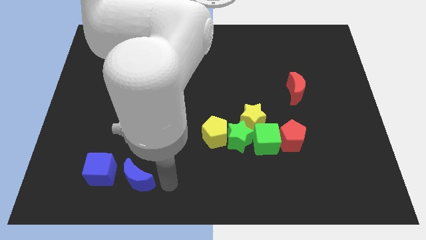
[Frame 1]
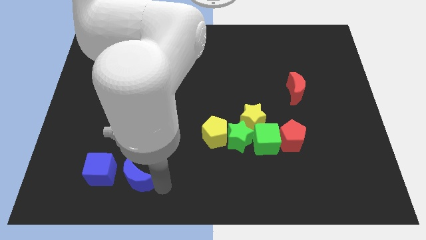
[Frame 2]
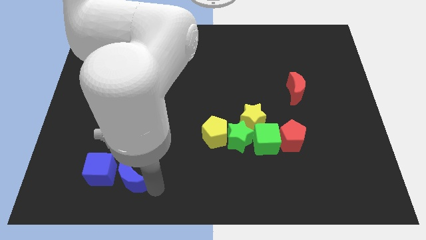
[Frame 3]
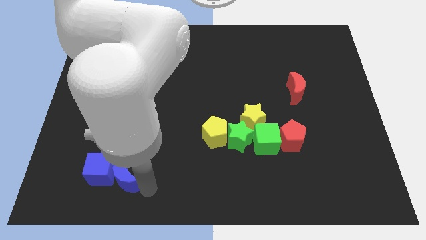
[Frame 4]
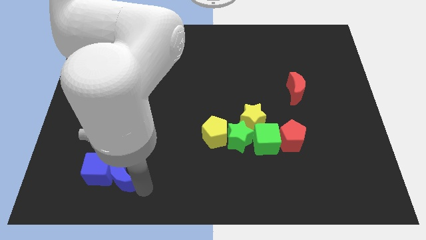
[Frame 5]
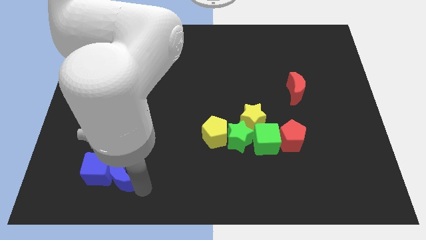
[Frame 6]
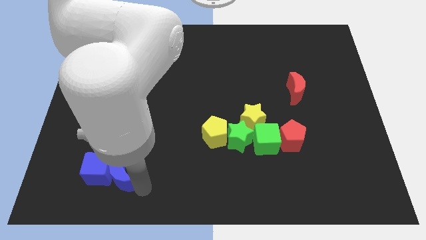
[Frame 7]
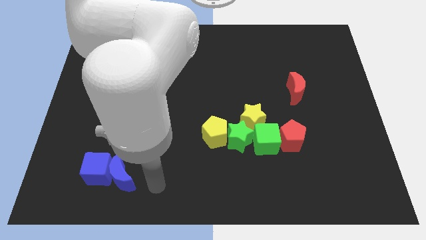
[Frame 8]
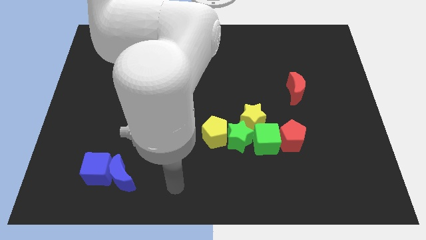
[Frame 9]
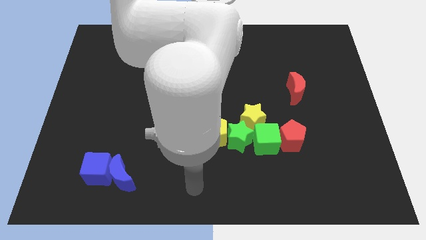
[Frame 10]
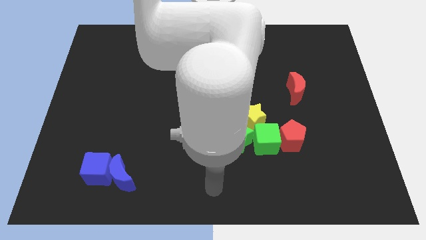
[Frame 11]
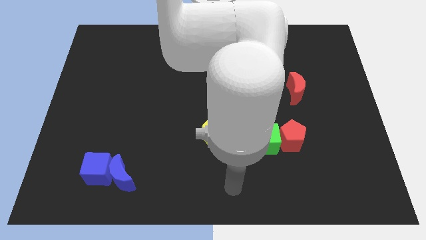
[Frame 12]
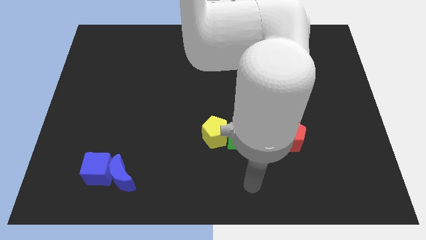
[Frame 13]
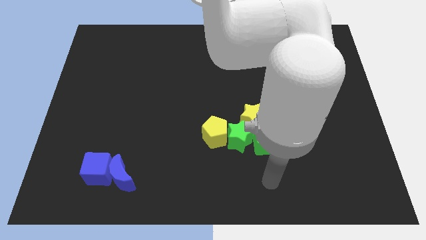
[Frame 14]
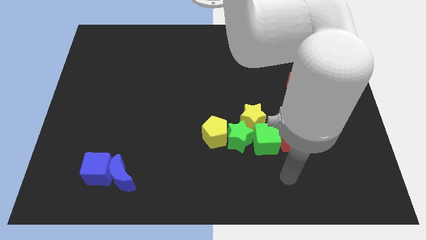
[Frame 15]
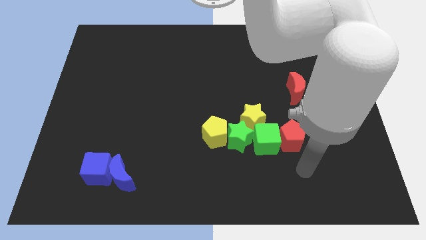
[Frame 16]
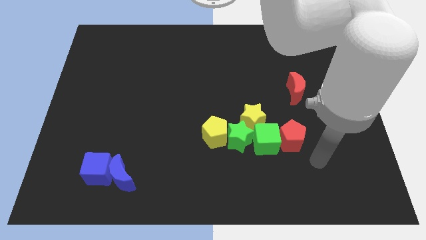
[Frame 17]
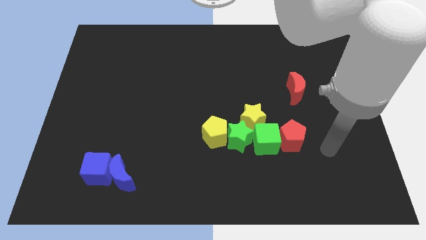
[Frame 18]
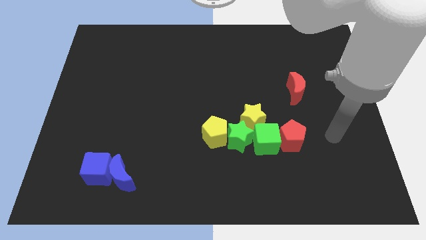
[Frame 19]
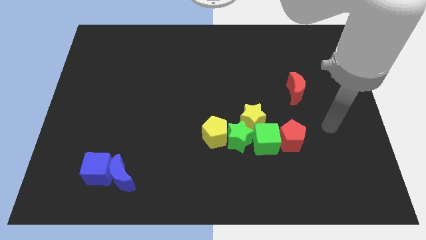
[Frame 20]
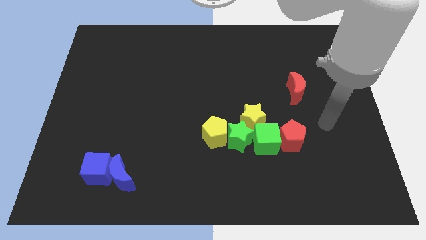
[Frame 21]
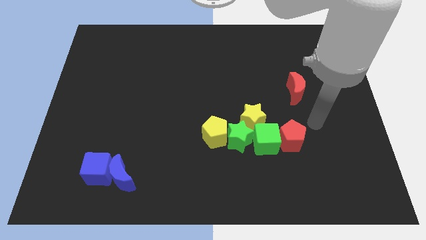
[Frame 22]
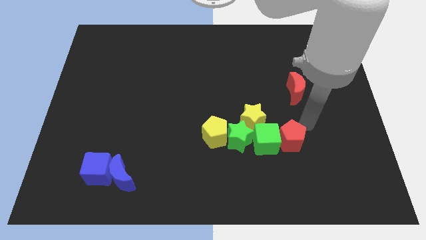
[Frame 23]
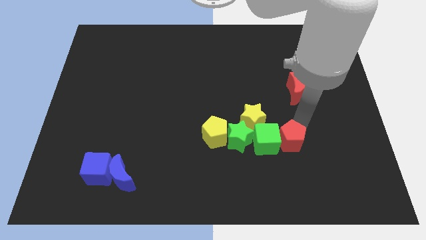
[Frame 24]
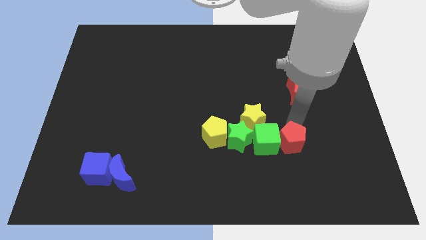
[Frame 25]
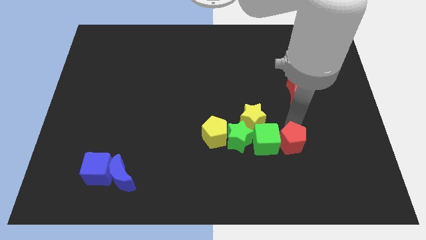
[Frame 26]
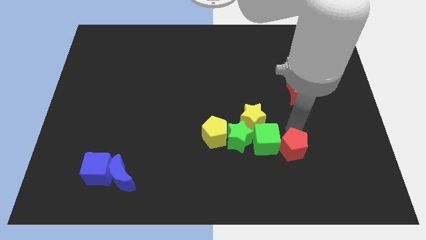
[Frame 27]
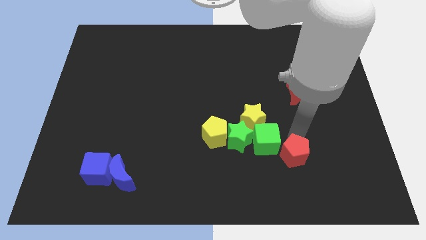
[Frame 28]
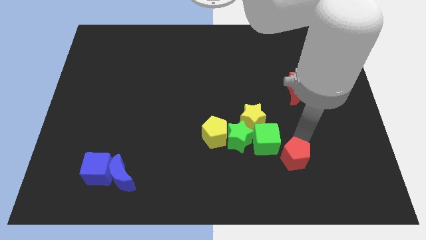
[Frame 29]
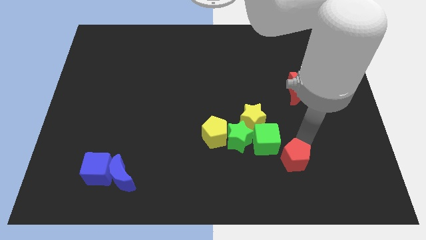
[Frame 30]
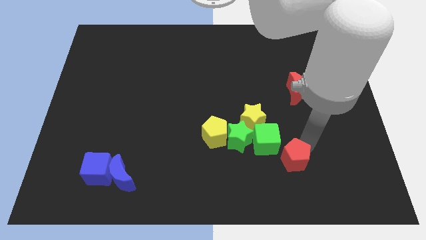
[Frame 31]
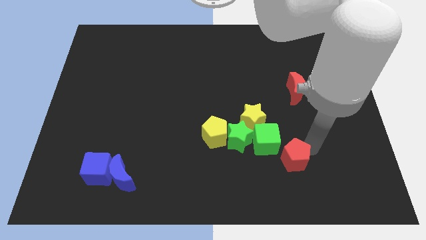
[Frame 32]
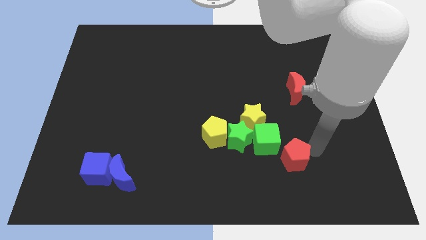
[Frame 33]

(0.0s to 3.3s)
push the red pentagon slightly down

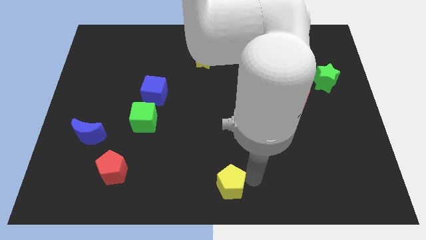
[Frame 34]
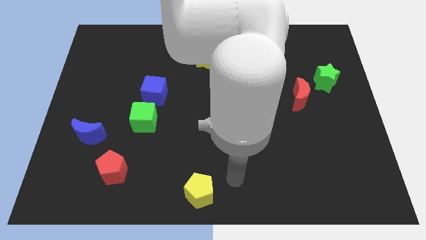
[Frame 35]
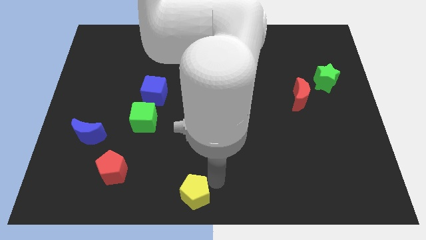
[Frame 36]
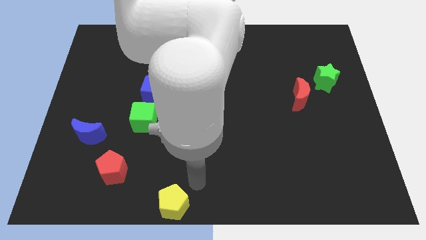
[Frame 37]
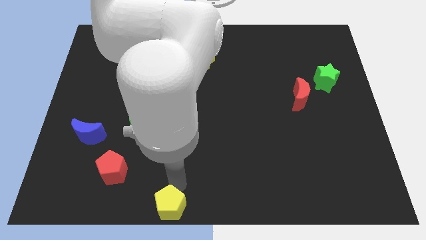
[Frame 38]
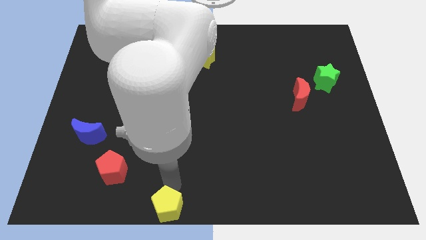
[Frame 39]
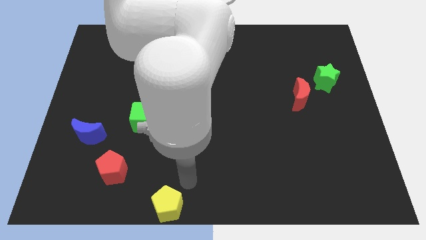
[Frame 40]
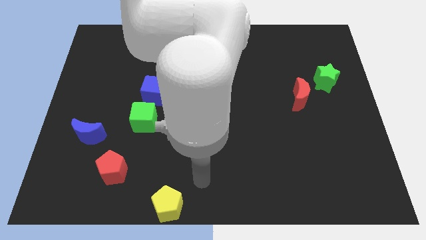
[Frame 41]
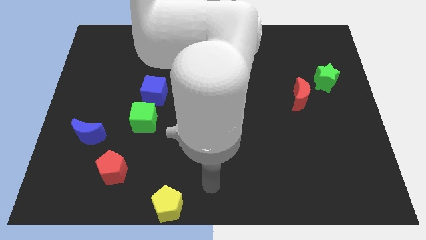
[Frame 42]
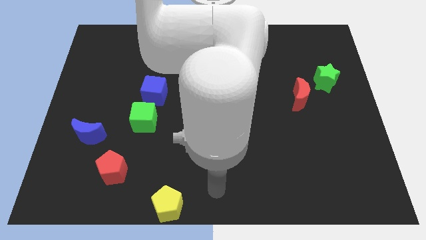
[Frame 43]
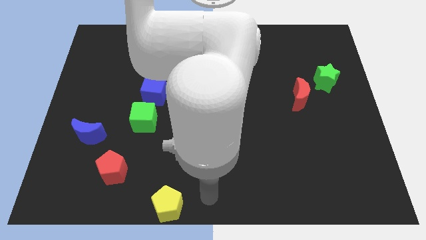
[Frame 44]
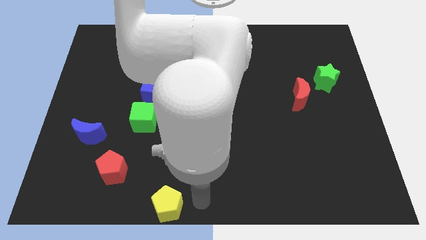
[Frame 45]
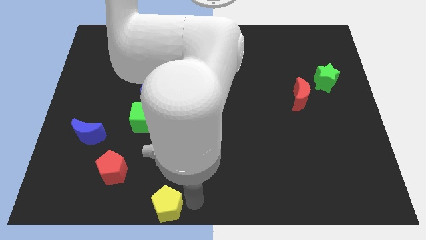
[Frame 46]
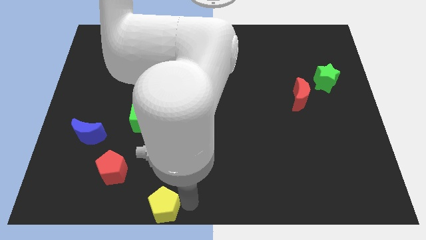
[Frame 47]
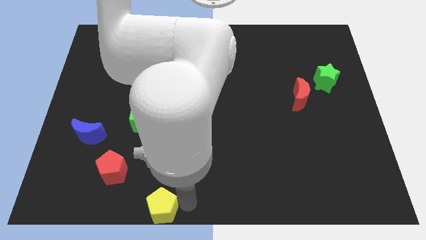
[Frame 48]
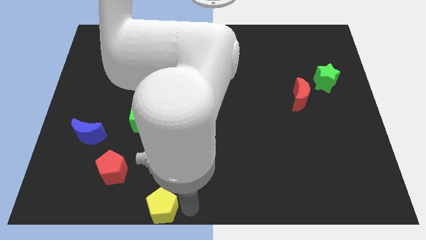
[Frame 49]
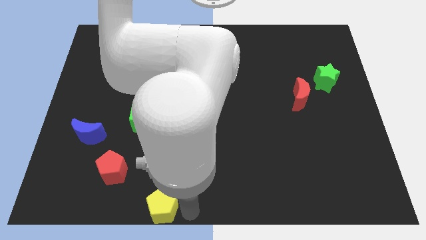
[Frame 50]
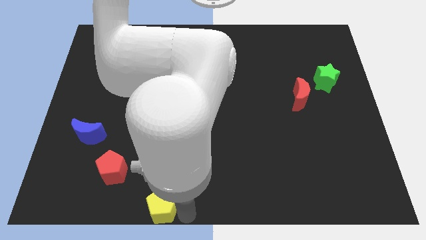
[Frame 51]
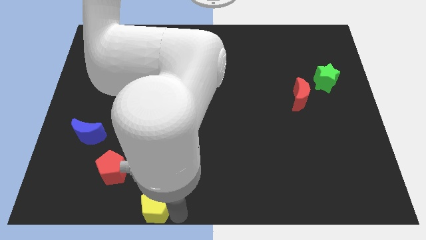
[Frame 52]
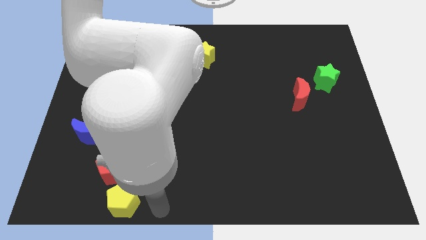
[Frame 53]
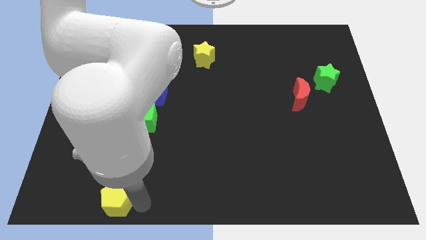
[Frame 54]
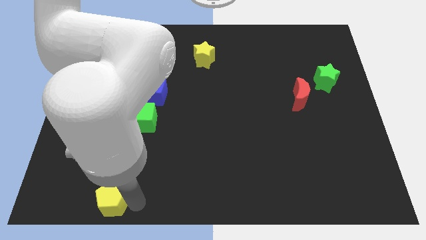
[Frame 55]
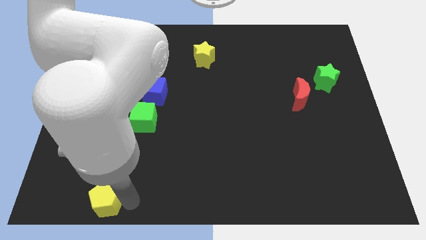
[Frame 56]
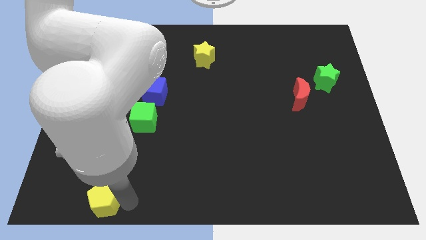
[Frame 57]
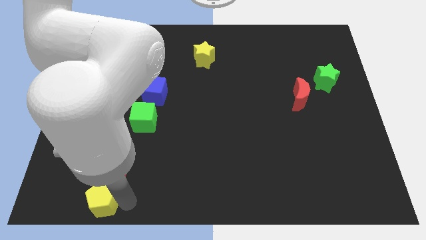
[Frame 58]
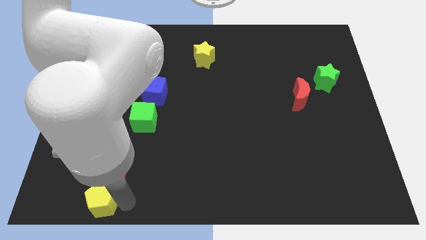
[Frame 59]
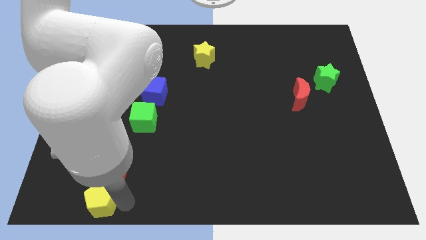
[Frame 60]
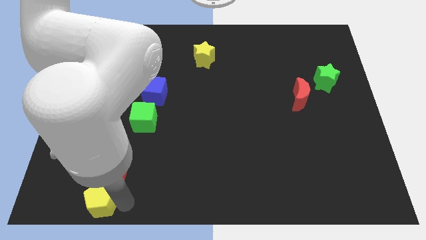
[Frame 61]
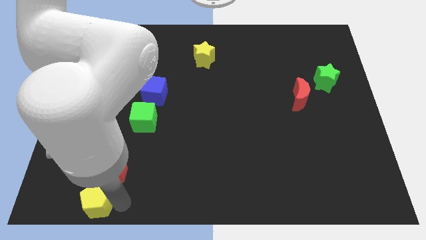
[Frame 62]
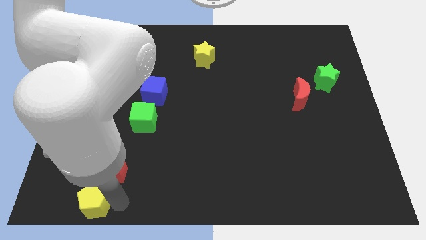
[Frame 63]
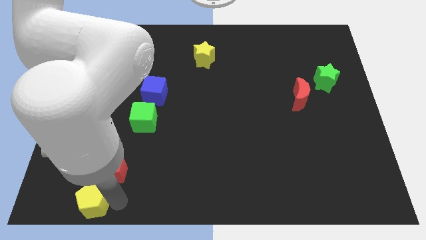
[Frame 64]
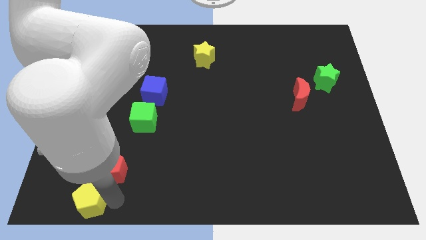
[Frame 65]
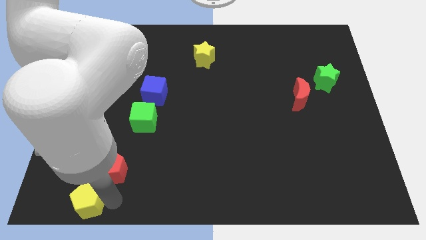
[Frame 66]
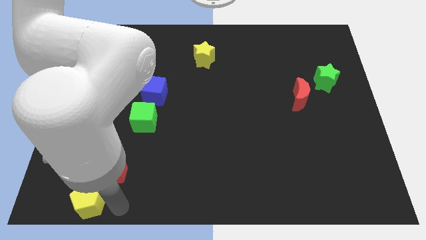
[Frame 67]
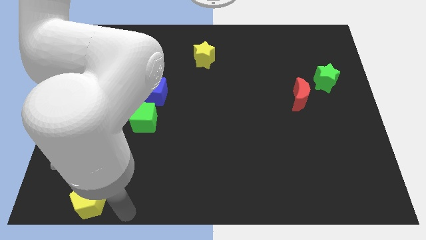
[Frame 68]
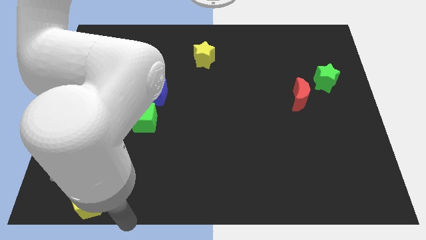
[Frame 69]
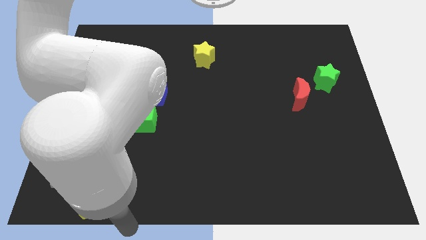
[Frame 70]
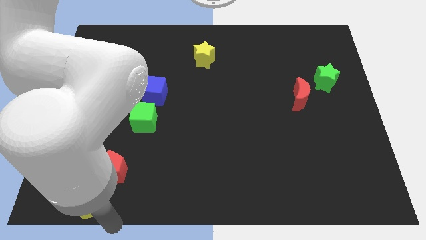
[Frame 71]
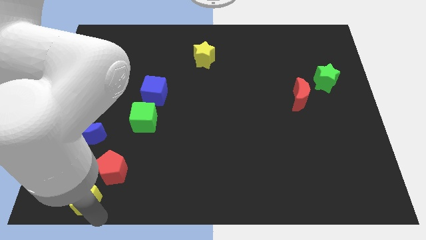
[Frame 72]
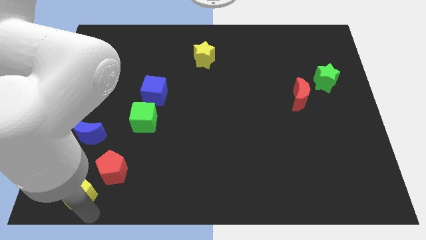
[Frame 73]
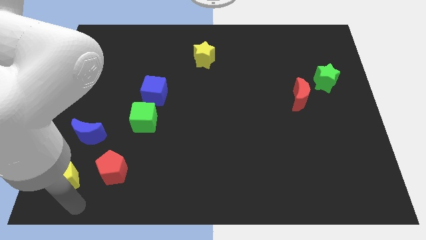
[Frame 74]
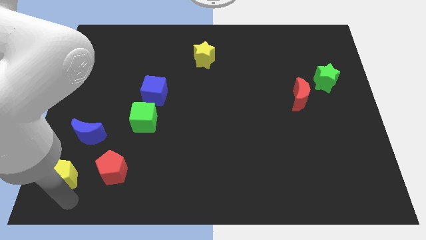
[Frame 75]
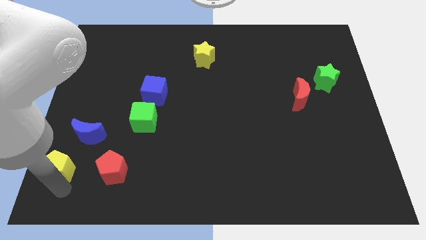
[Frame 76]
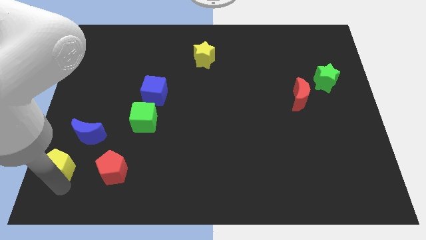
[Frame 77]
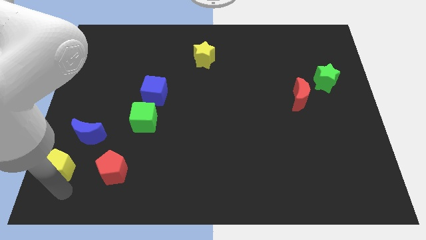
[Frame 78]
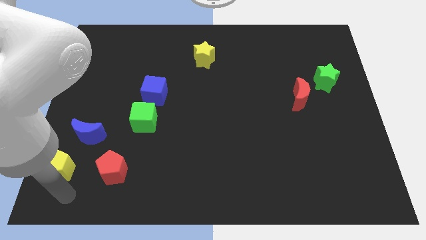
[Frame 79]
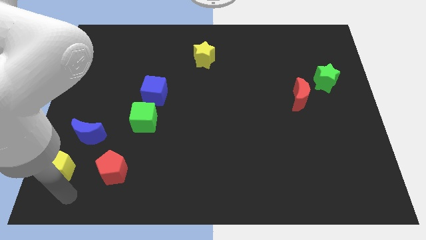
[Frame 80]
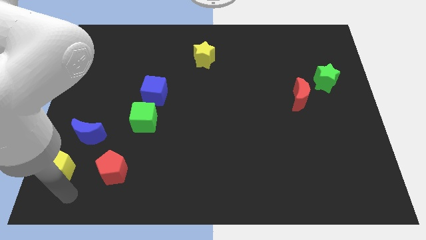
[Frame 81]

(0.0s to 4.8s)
push the yellow pentagon to its left

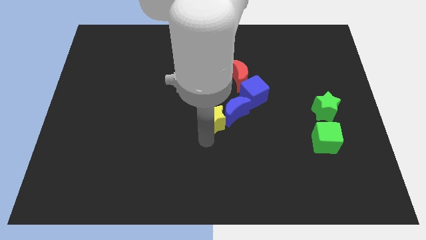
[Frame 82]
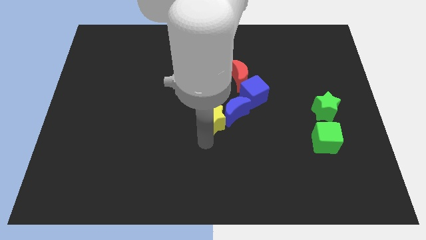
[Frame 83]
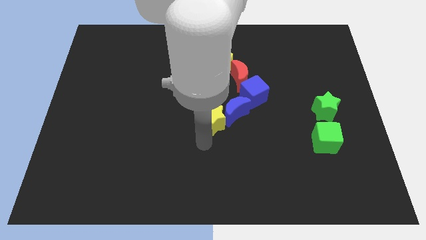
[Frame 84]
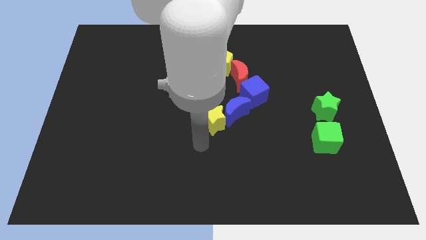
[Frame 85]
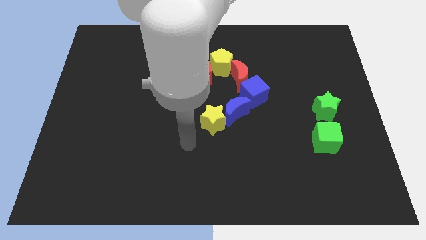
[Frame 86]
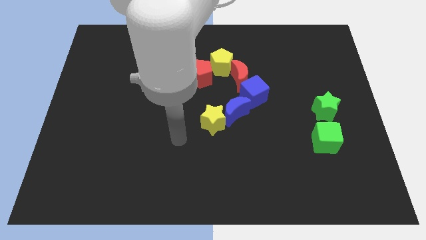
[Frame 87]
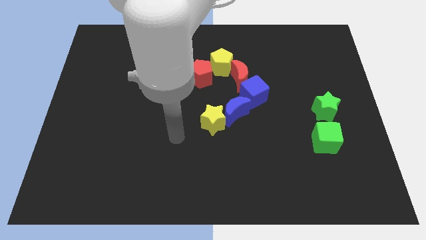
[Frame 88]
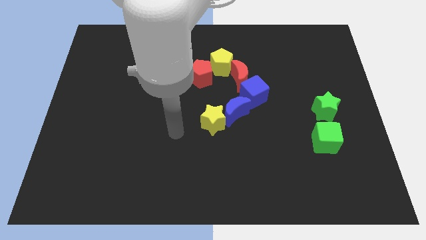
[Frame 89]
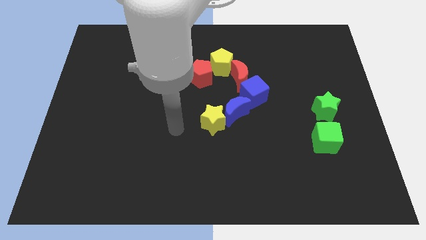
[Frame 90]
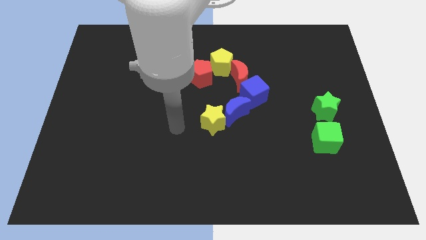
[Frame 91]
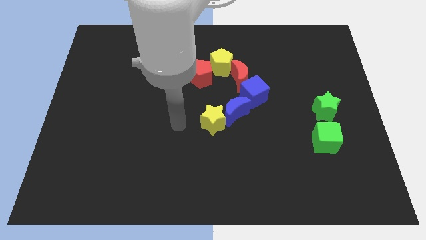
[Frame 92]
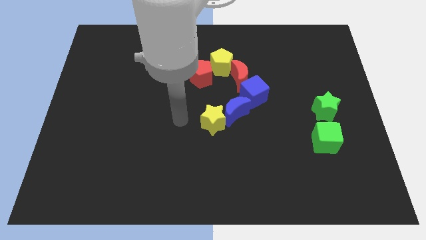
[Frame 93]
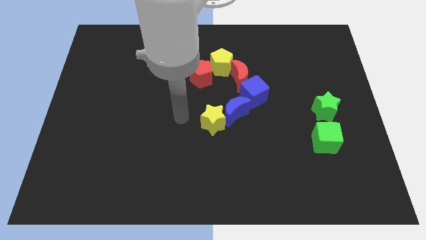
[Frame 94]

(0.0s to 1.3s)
point your arm to the left side of yellow star
